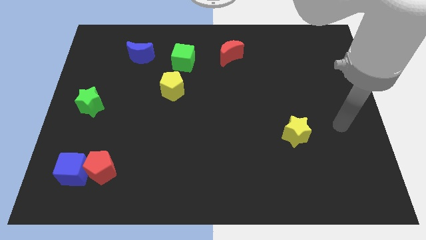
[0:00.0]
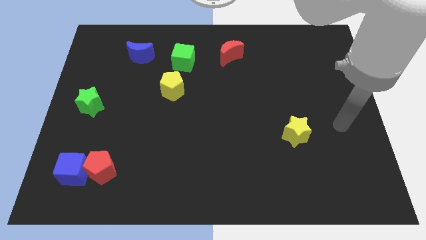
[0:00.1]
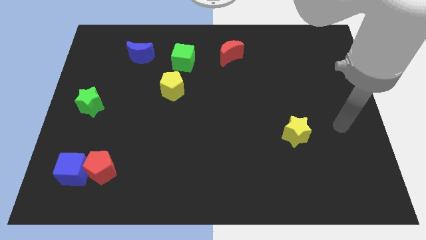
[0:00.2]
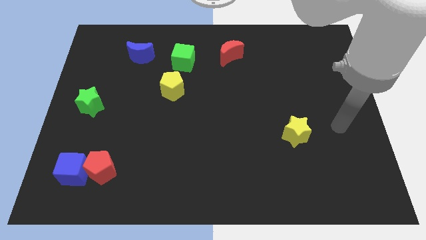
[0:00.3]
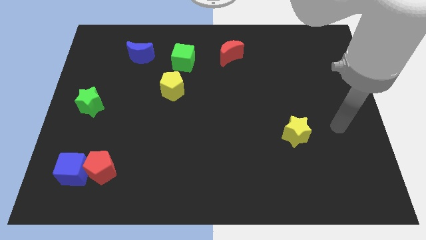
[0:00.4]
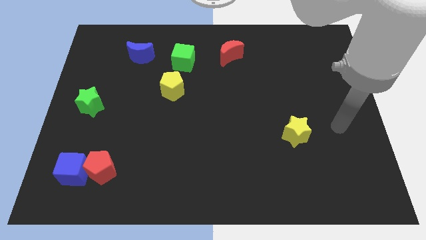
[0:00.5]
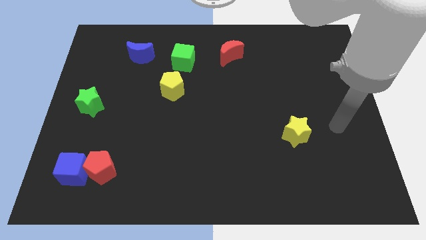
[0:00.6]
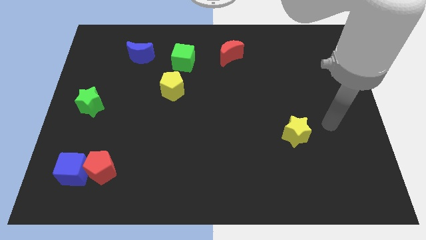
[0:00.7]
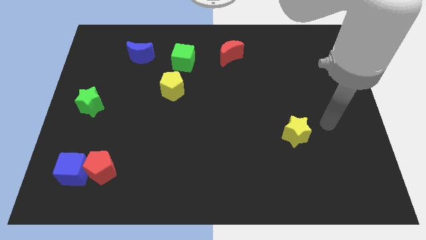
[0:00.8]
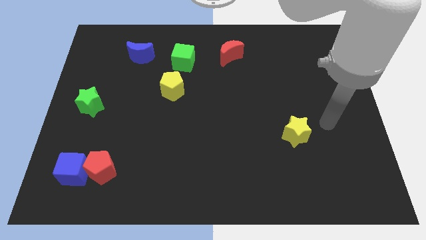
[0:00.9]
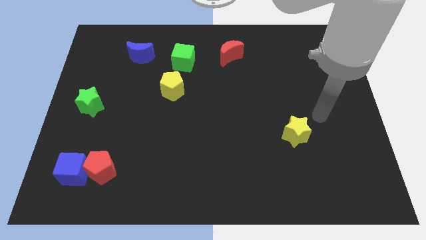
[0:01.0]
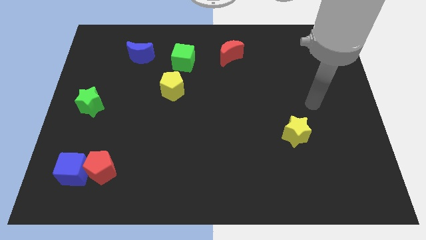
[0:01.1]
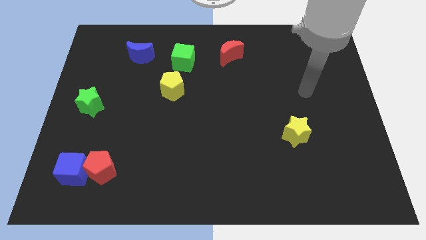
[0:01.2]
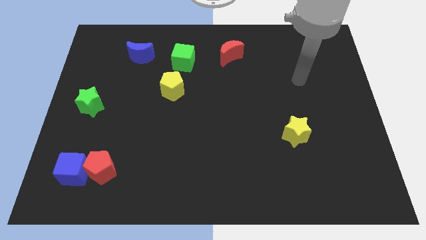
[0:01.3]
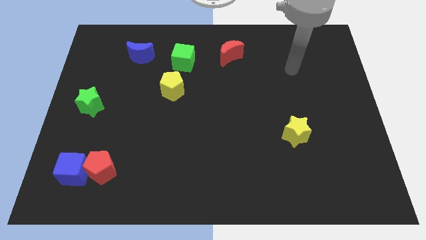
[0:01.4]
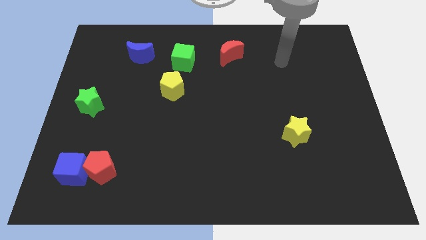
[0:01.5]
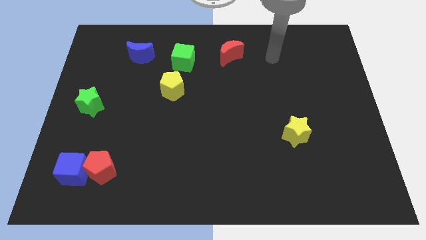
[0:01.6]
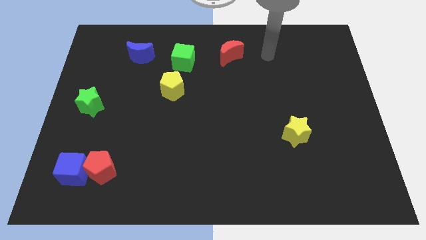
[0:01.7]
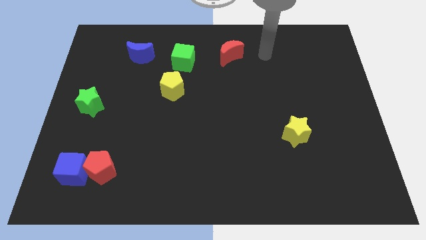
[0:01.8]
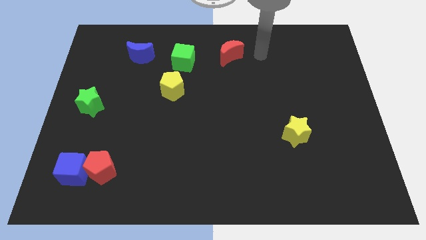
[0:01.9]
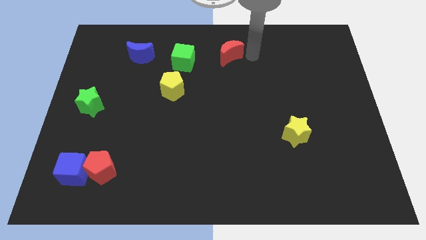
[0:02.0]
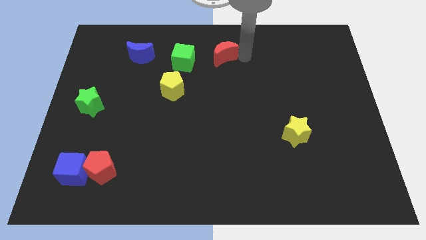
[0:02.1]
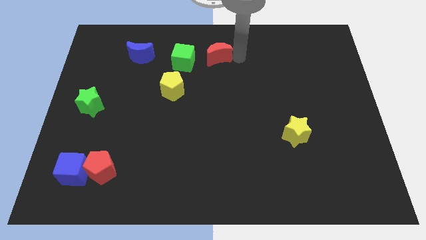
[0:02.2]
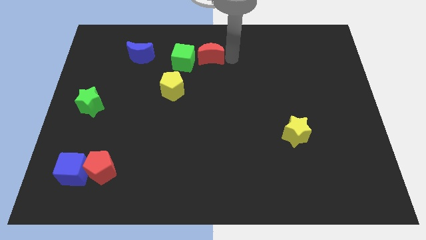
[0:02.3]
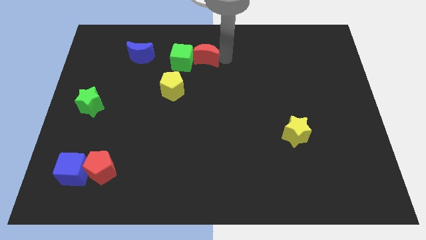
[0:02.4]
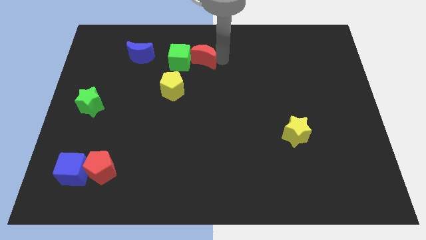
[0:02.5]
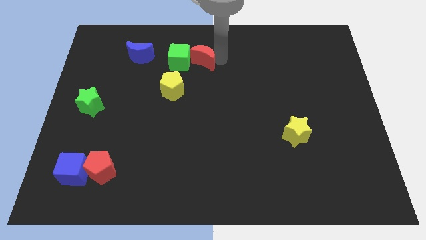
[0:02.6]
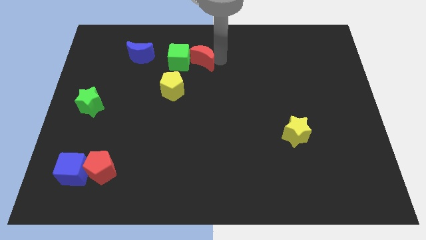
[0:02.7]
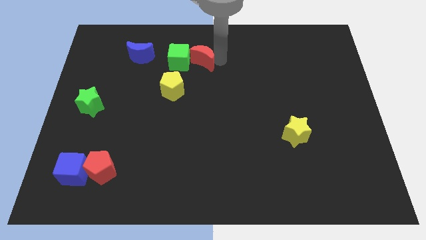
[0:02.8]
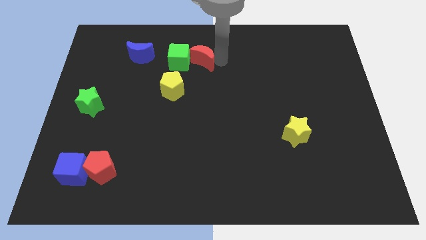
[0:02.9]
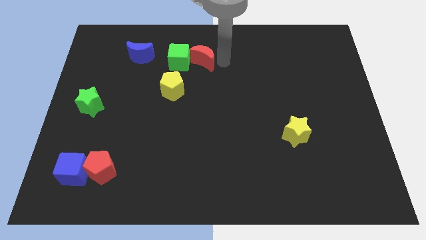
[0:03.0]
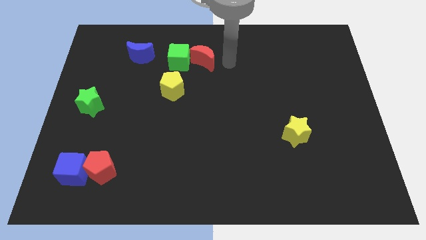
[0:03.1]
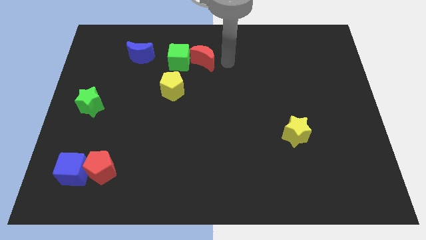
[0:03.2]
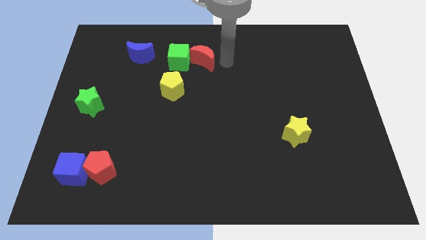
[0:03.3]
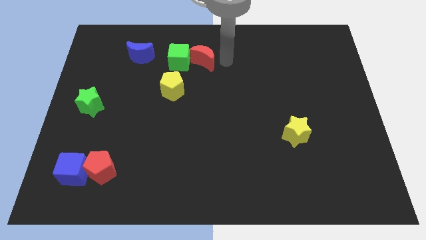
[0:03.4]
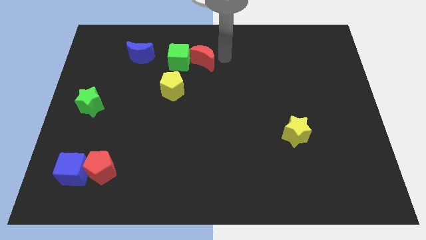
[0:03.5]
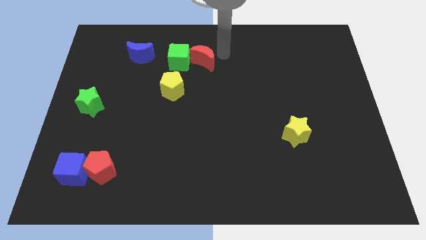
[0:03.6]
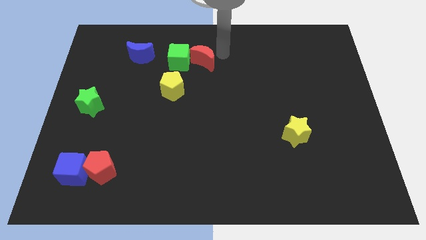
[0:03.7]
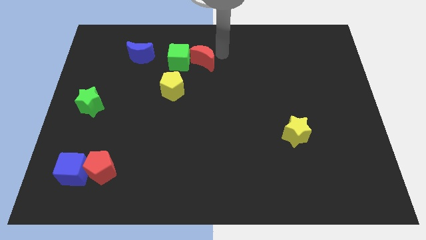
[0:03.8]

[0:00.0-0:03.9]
push the red crescent into the green cube

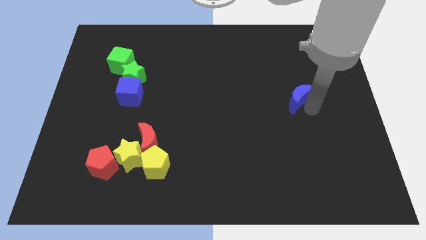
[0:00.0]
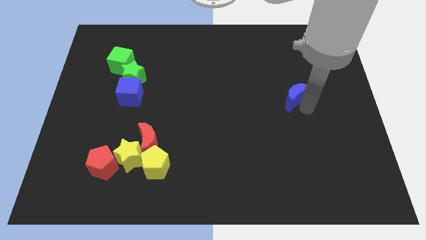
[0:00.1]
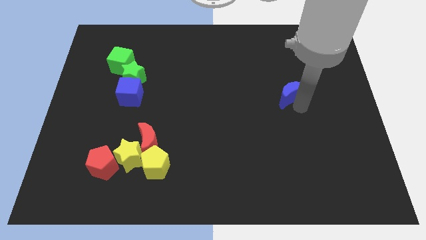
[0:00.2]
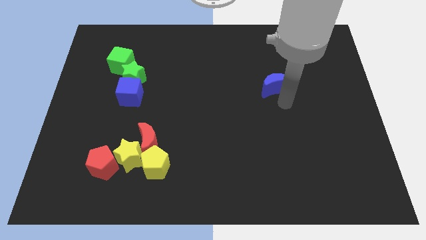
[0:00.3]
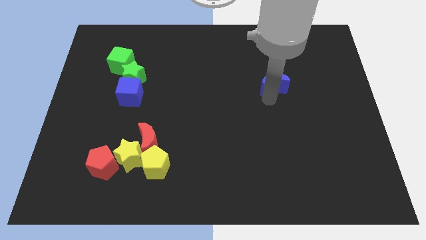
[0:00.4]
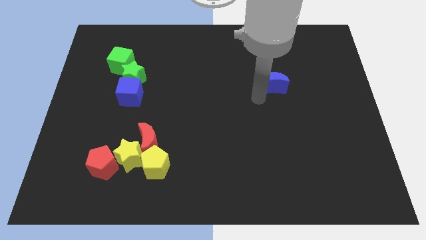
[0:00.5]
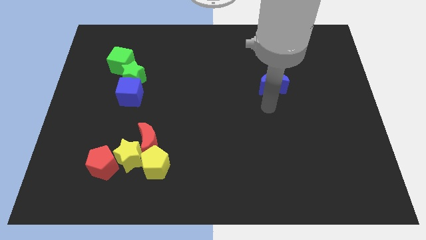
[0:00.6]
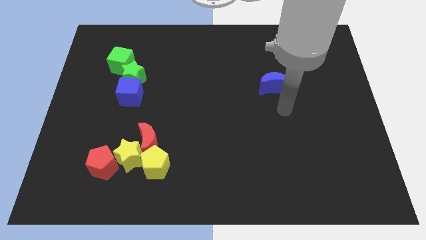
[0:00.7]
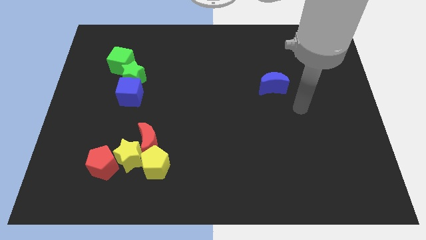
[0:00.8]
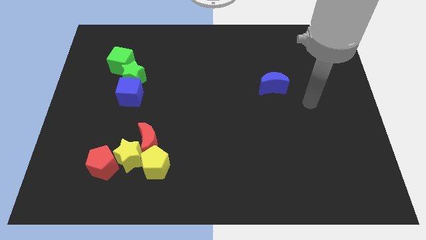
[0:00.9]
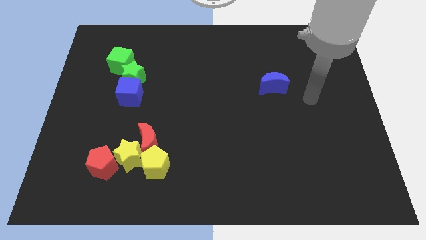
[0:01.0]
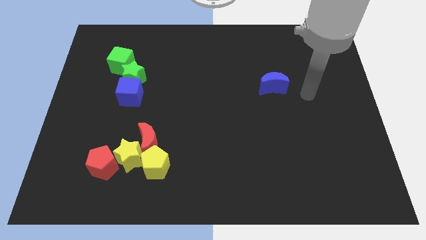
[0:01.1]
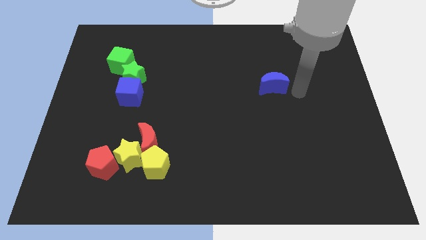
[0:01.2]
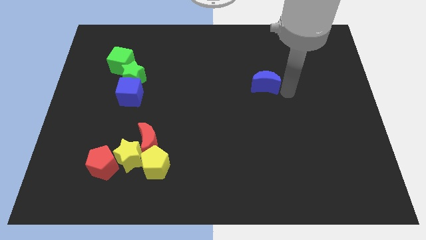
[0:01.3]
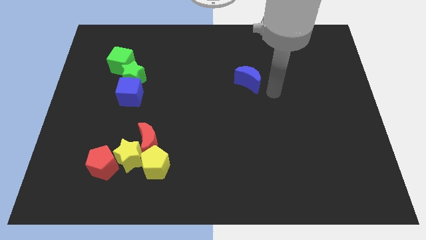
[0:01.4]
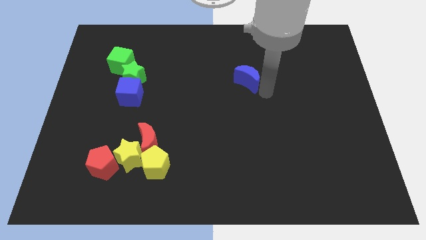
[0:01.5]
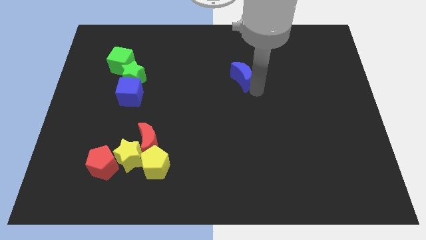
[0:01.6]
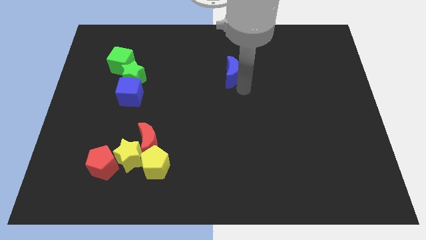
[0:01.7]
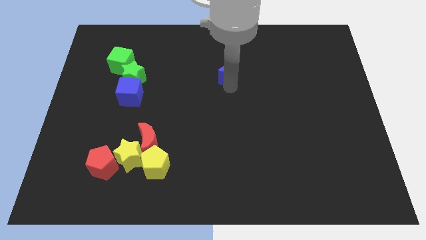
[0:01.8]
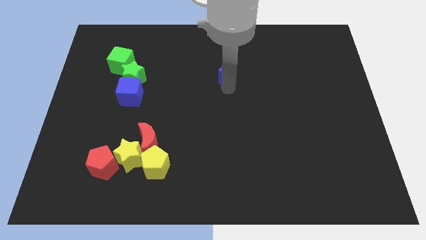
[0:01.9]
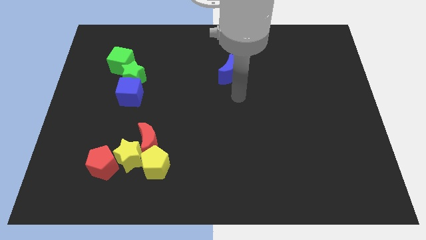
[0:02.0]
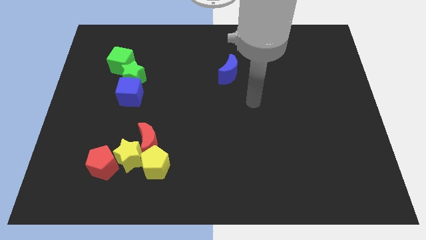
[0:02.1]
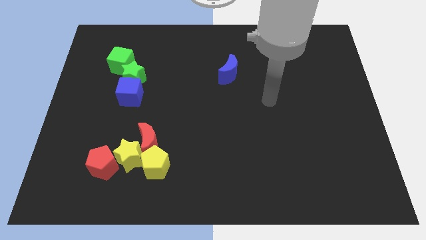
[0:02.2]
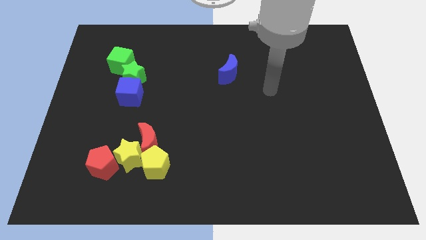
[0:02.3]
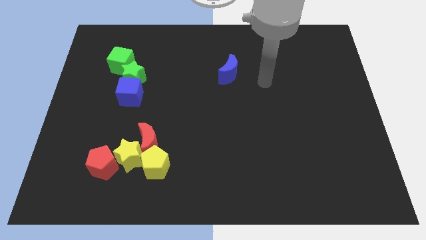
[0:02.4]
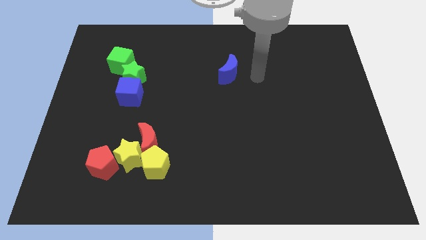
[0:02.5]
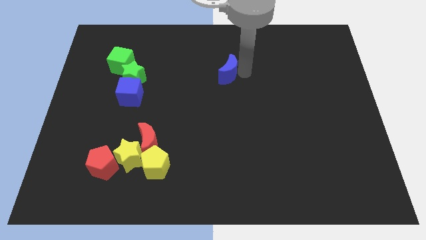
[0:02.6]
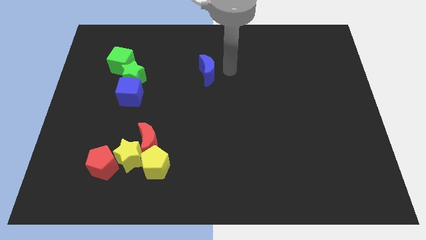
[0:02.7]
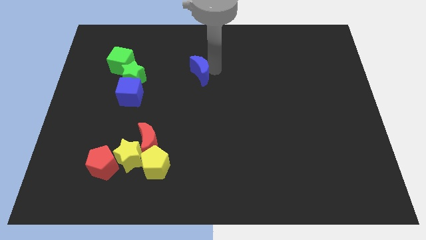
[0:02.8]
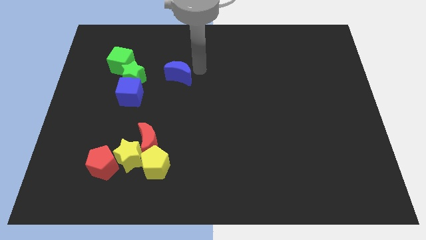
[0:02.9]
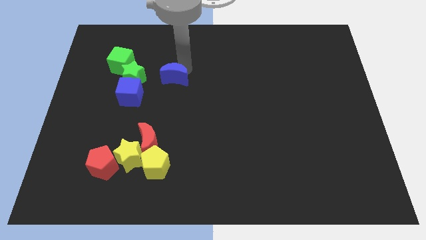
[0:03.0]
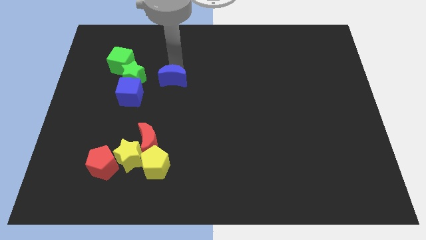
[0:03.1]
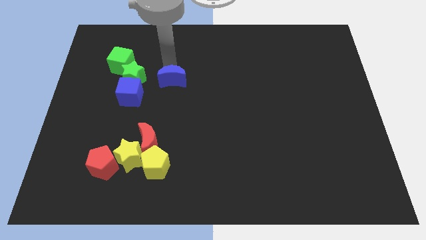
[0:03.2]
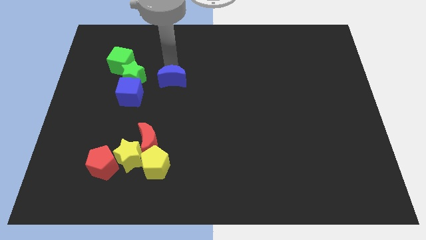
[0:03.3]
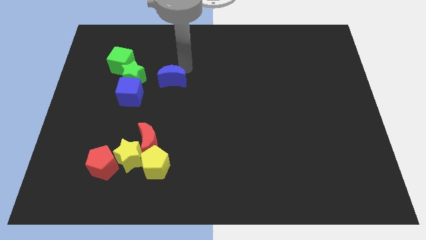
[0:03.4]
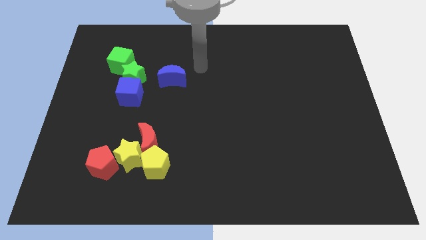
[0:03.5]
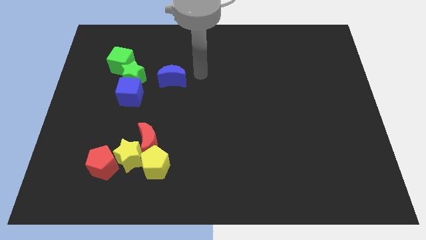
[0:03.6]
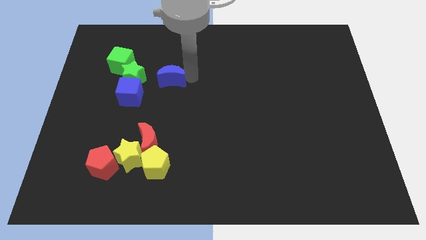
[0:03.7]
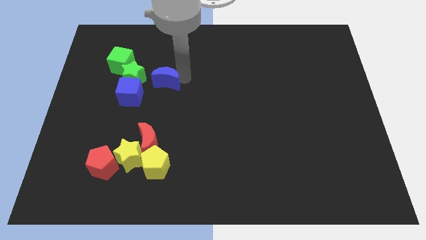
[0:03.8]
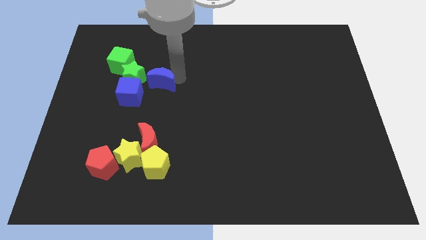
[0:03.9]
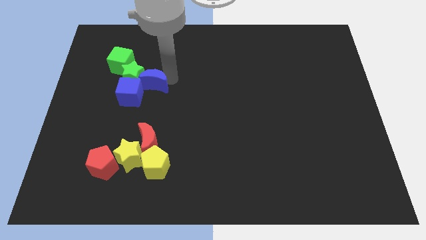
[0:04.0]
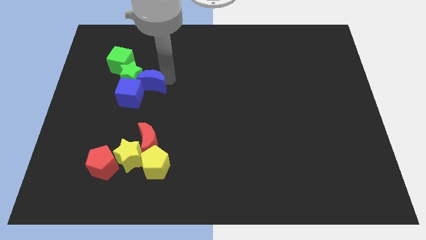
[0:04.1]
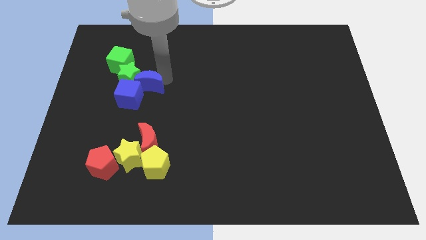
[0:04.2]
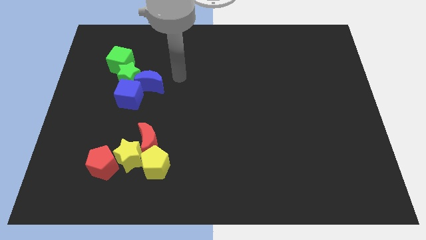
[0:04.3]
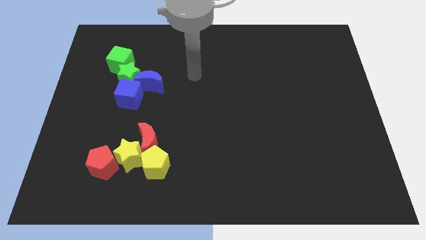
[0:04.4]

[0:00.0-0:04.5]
move the blue crescent into the green star and blue cube

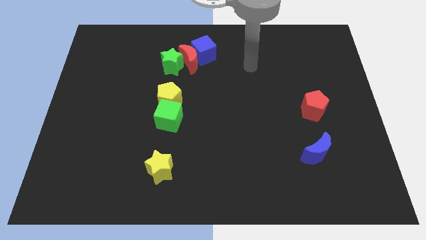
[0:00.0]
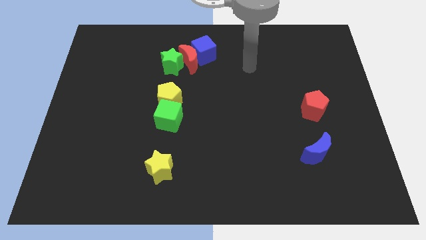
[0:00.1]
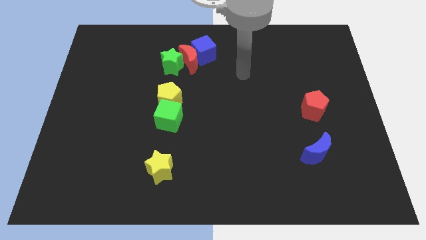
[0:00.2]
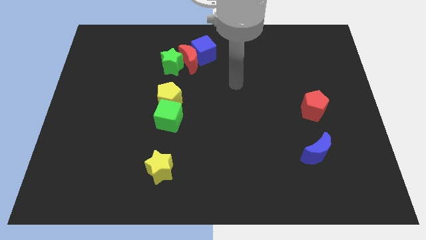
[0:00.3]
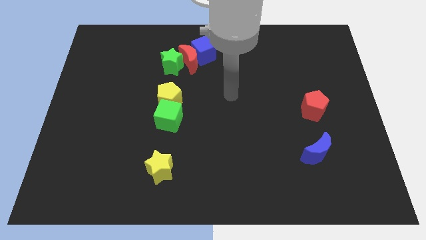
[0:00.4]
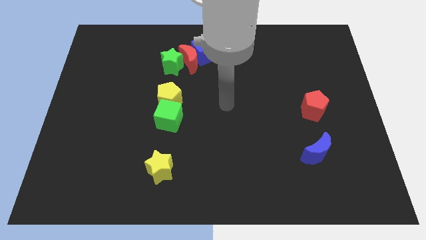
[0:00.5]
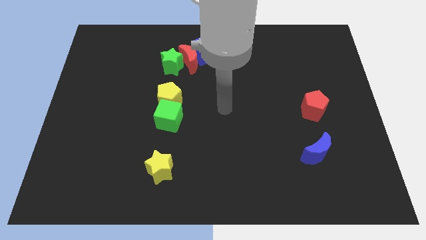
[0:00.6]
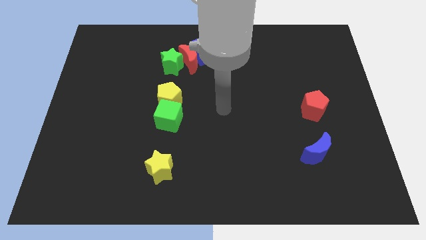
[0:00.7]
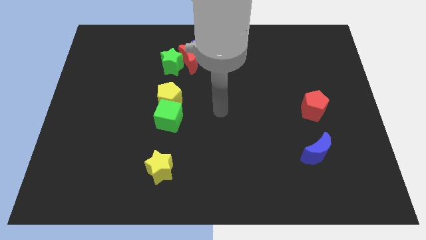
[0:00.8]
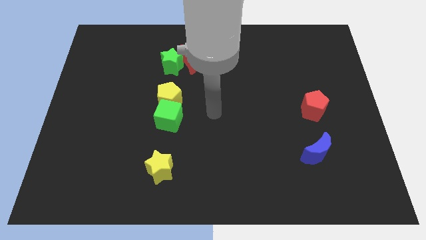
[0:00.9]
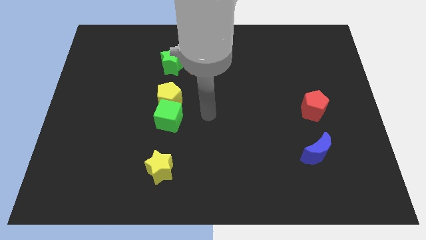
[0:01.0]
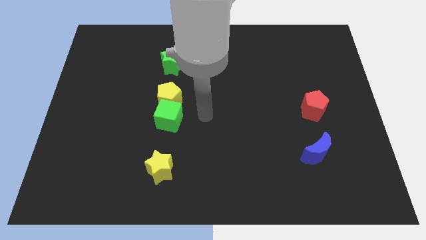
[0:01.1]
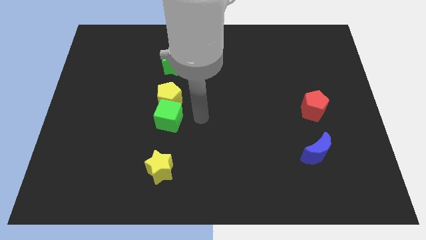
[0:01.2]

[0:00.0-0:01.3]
move your arm towards the green cube
